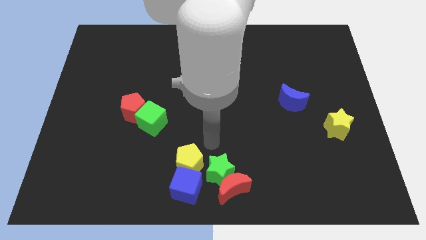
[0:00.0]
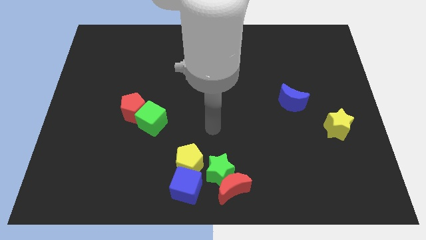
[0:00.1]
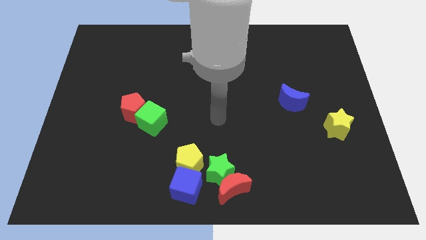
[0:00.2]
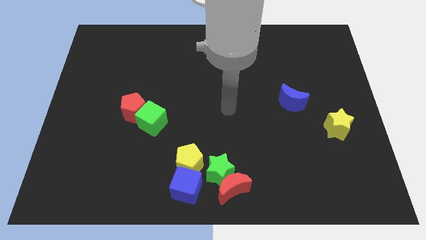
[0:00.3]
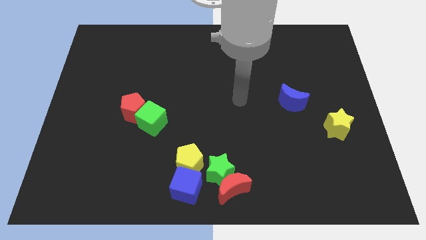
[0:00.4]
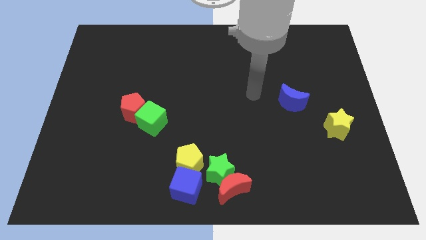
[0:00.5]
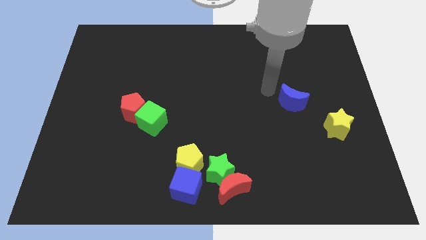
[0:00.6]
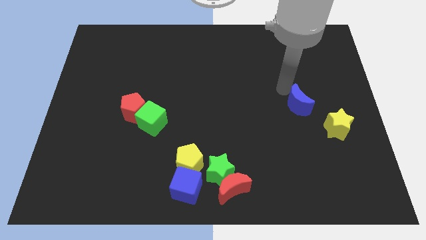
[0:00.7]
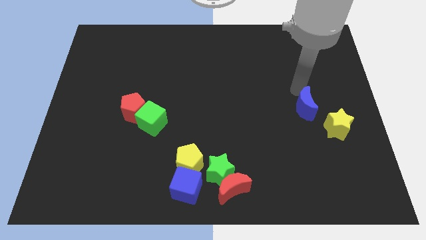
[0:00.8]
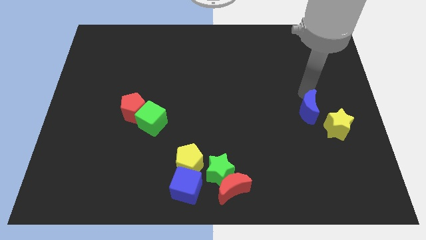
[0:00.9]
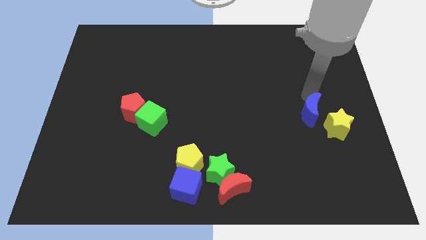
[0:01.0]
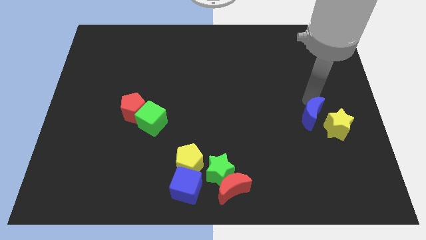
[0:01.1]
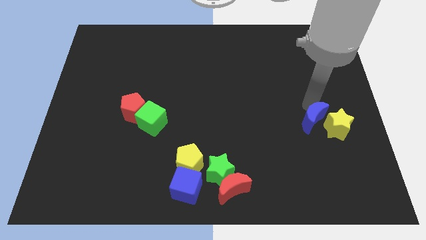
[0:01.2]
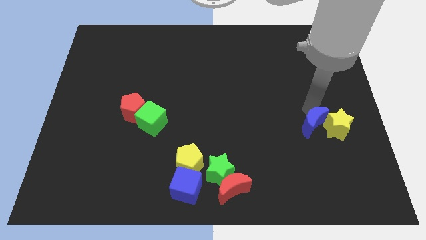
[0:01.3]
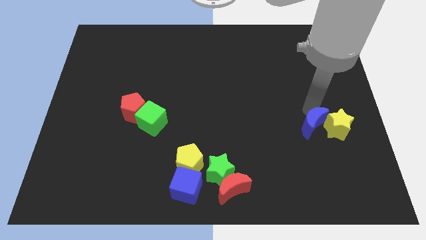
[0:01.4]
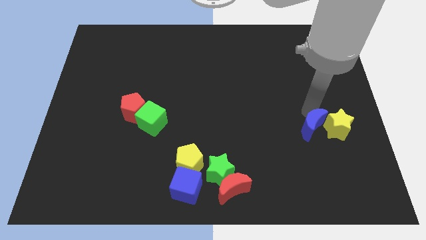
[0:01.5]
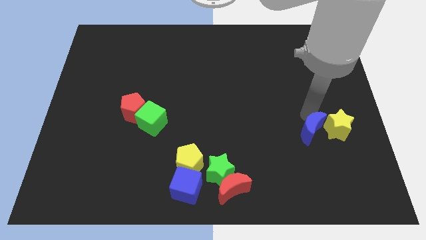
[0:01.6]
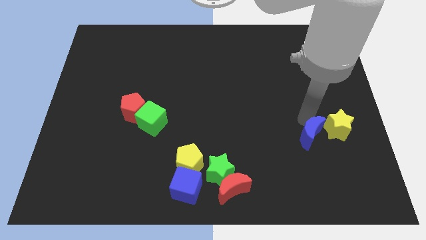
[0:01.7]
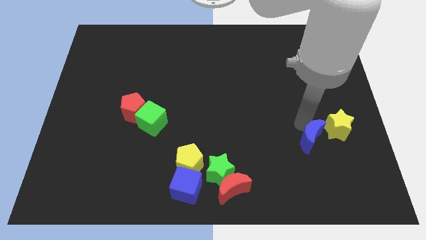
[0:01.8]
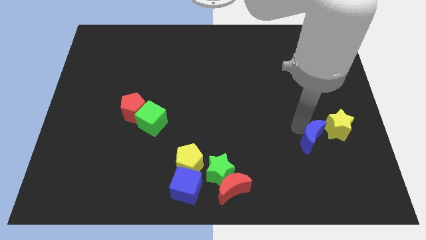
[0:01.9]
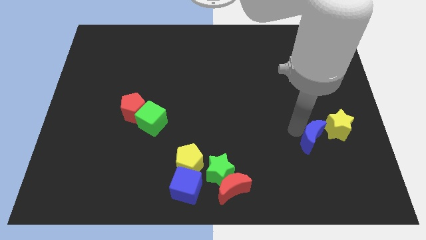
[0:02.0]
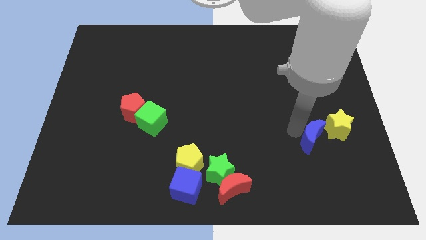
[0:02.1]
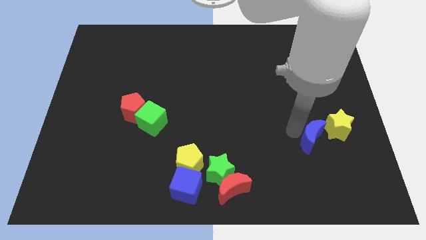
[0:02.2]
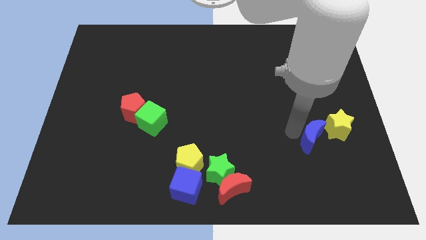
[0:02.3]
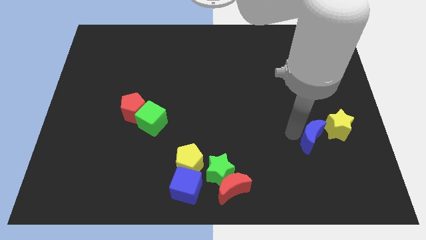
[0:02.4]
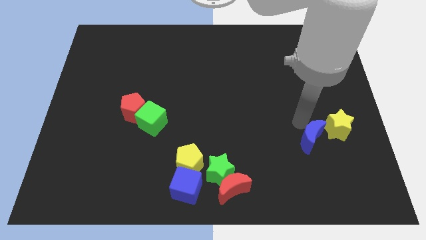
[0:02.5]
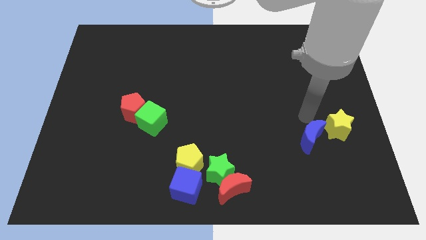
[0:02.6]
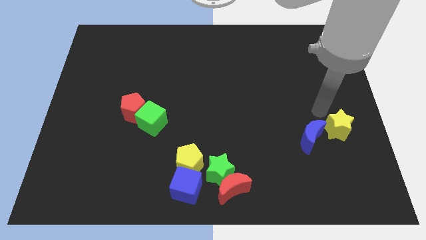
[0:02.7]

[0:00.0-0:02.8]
push the blue crescent to the bottom

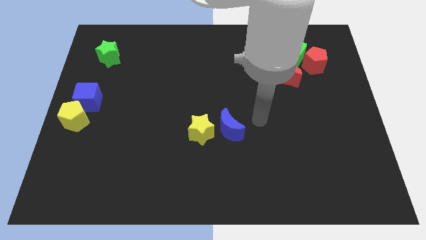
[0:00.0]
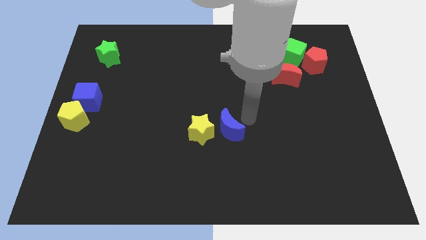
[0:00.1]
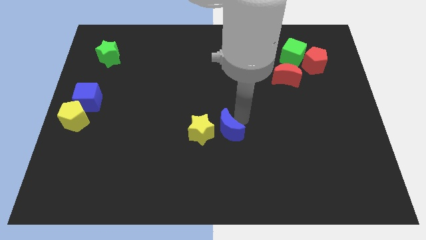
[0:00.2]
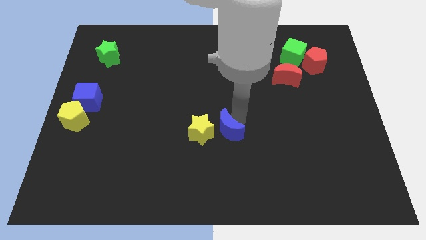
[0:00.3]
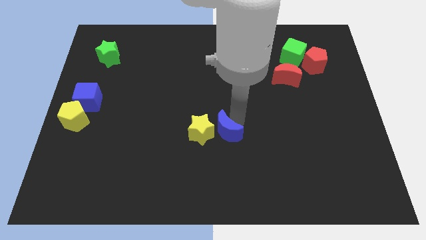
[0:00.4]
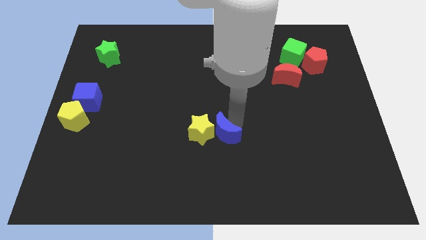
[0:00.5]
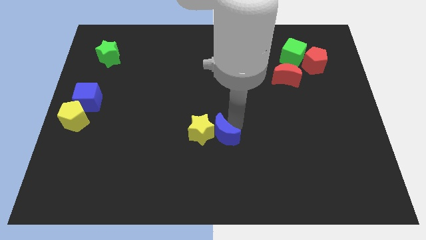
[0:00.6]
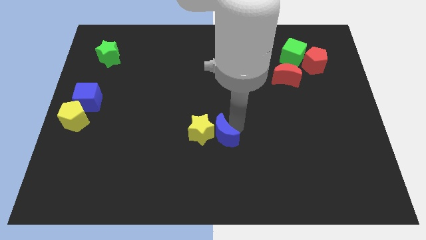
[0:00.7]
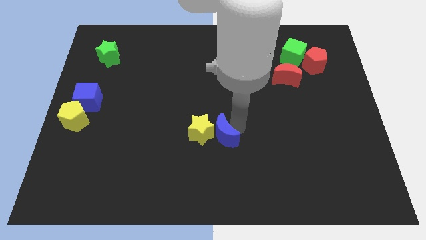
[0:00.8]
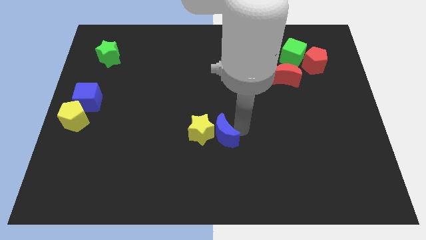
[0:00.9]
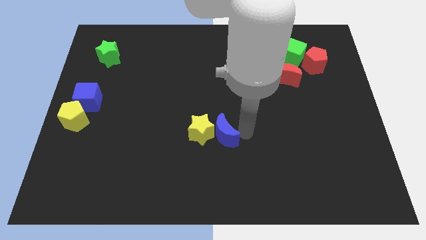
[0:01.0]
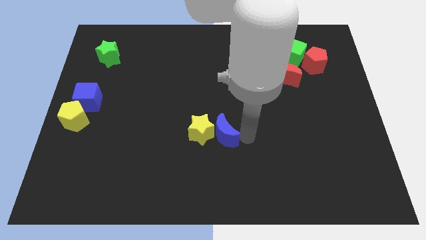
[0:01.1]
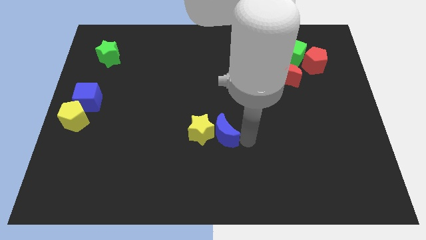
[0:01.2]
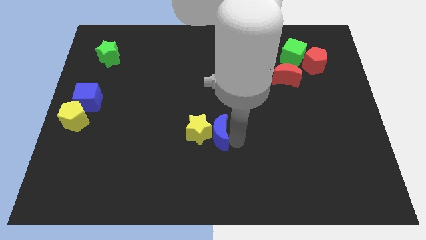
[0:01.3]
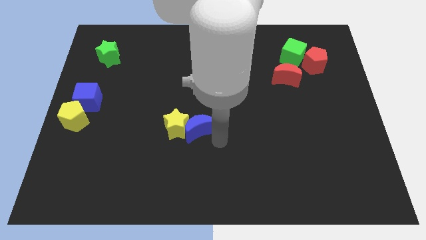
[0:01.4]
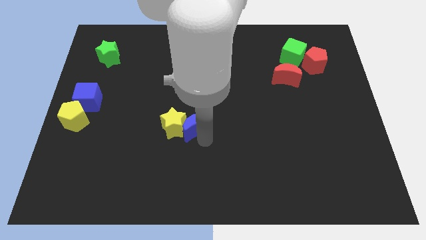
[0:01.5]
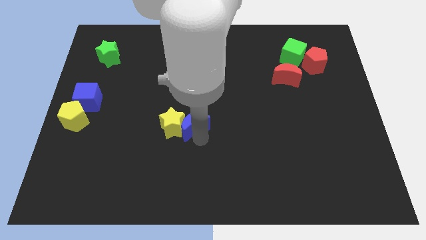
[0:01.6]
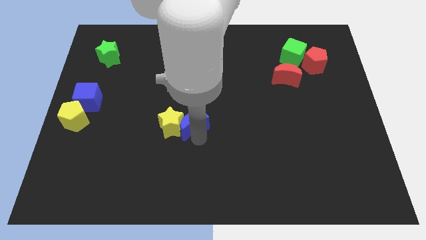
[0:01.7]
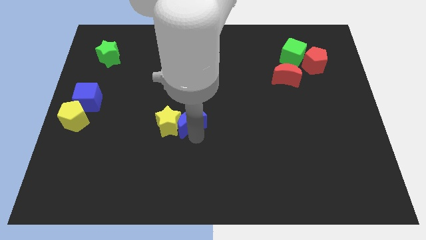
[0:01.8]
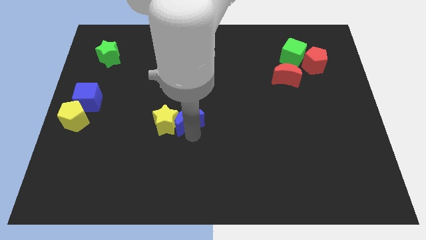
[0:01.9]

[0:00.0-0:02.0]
move the blue moon into the yellow star towards left

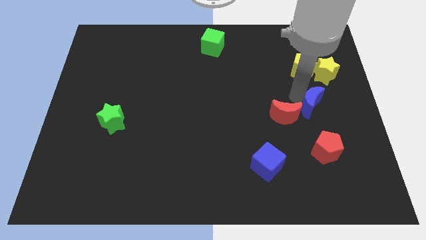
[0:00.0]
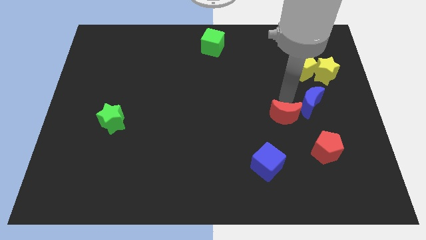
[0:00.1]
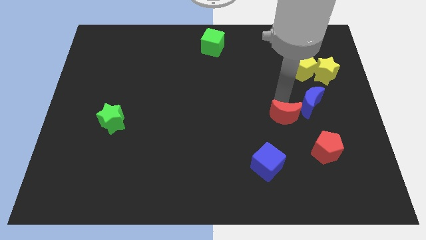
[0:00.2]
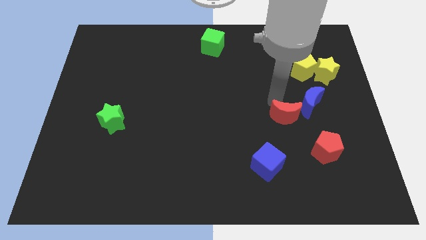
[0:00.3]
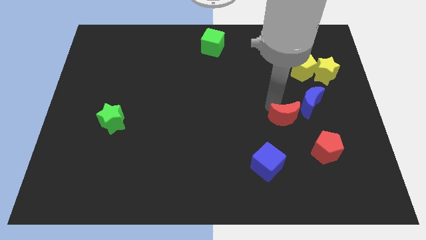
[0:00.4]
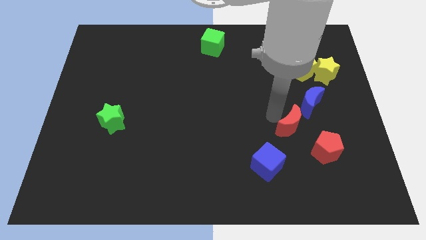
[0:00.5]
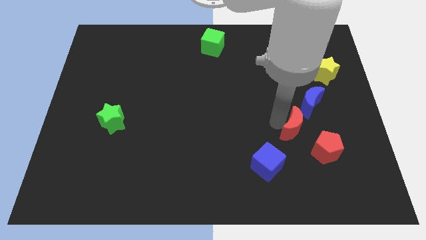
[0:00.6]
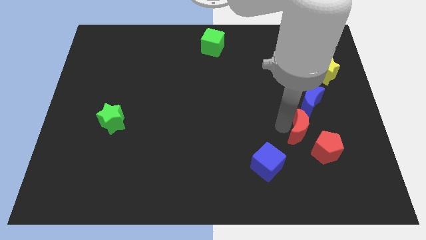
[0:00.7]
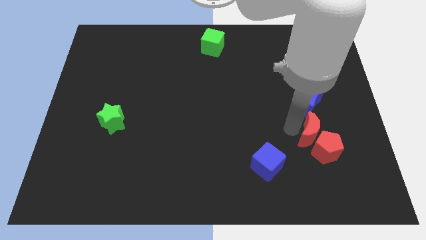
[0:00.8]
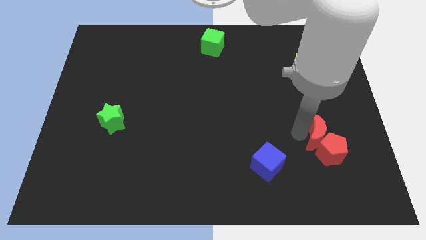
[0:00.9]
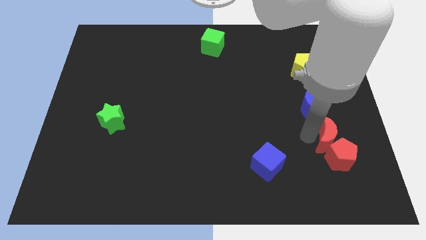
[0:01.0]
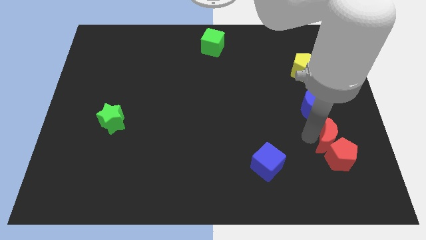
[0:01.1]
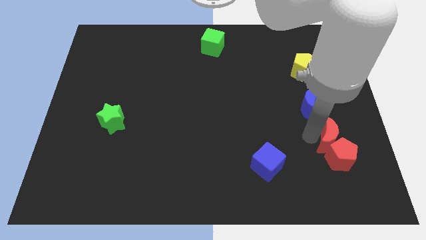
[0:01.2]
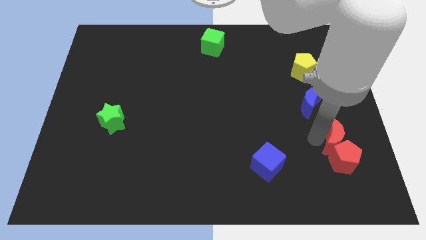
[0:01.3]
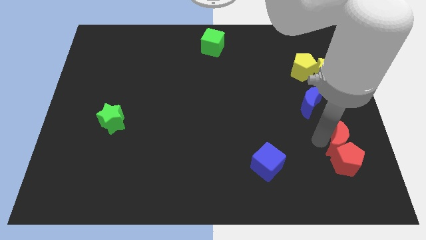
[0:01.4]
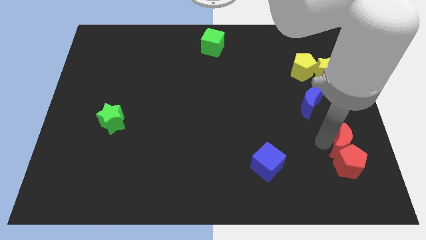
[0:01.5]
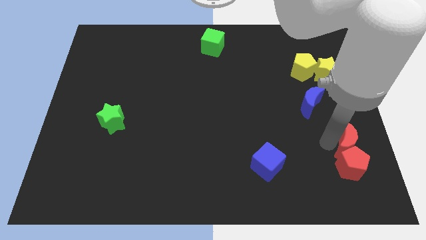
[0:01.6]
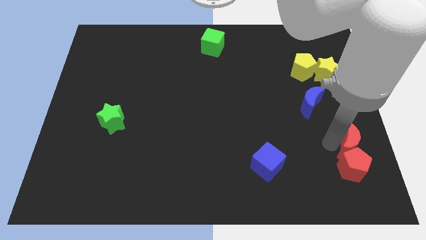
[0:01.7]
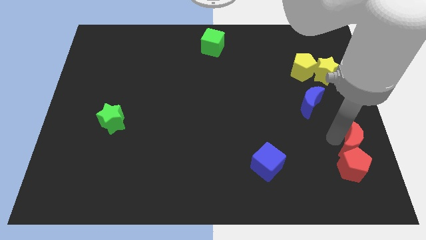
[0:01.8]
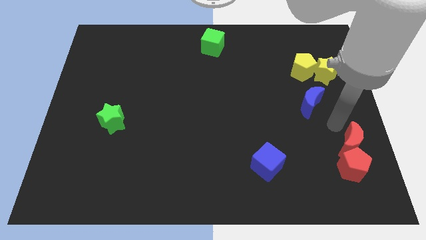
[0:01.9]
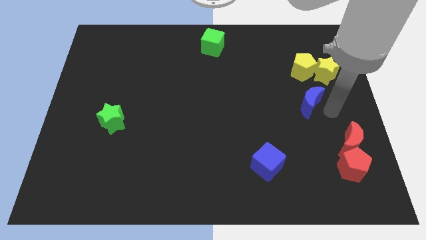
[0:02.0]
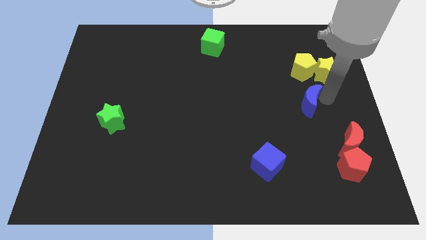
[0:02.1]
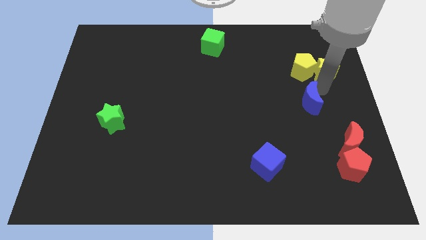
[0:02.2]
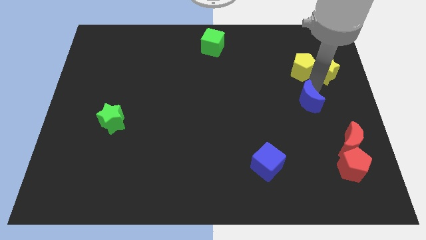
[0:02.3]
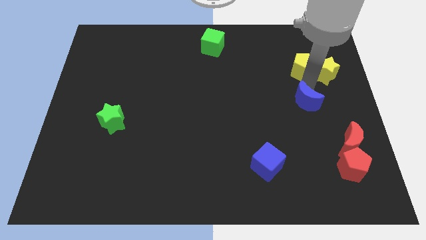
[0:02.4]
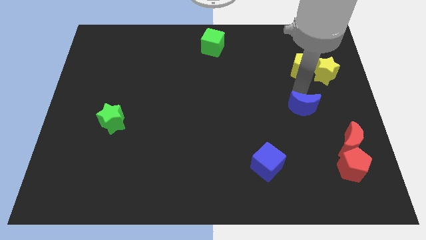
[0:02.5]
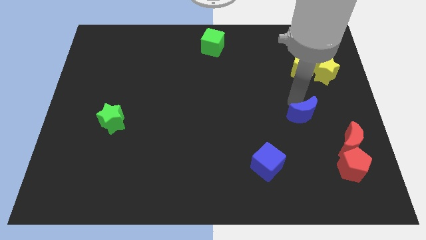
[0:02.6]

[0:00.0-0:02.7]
separate the crescents

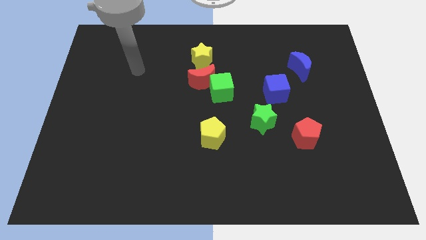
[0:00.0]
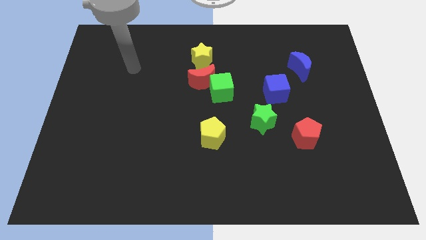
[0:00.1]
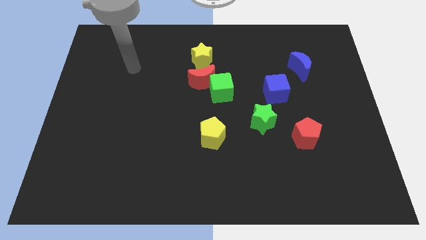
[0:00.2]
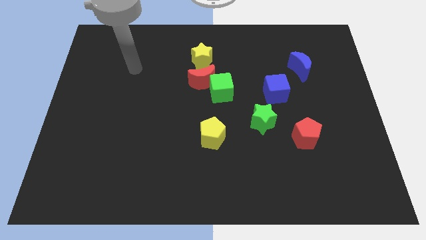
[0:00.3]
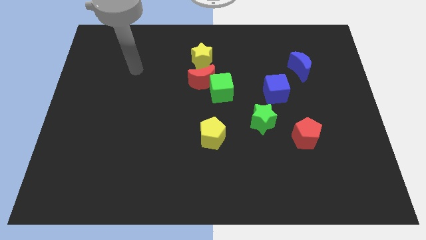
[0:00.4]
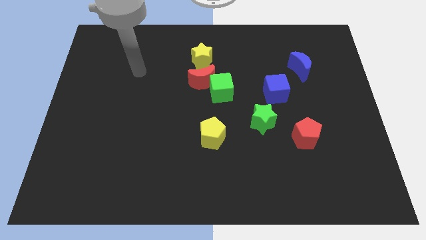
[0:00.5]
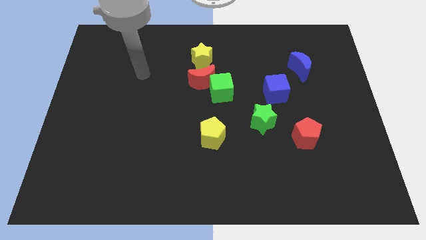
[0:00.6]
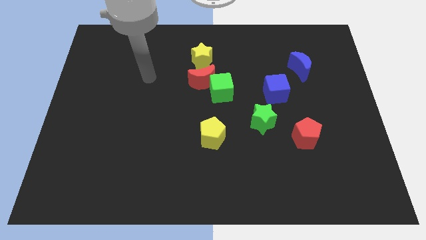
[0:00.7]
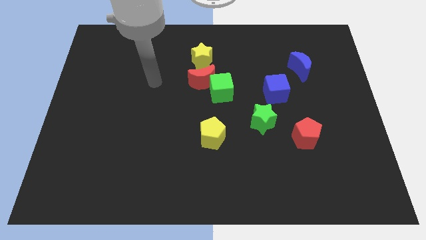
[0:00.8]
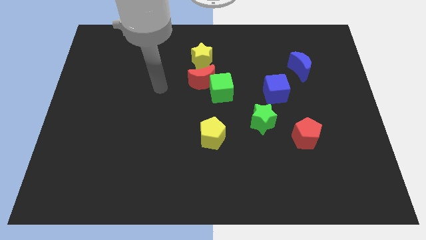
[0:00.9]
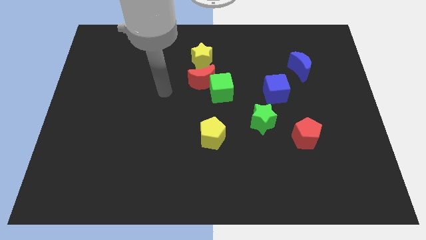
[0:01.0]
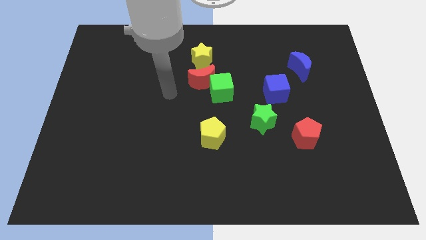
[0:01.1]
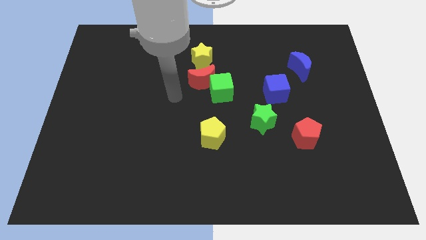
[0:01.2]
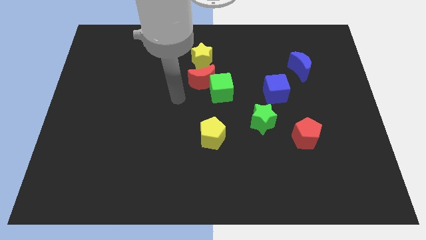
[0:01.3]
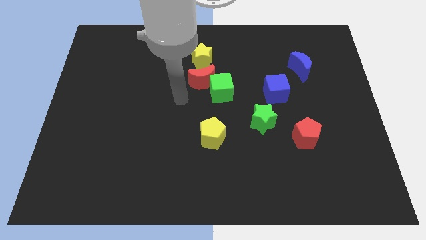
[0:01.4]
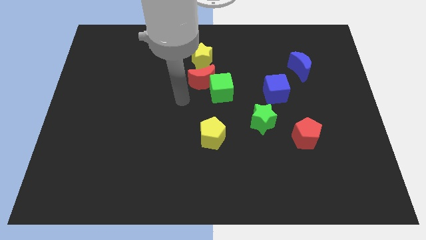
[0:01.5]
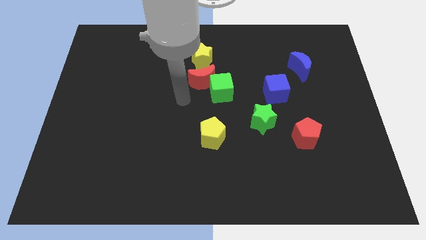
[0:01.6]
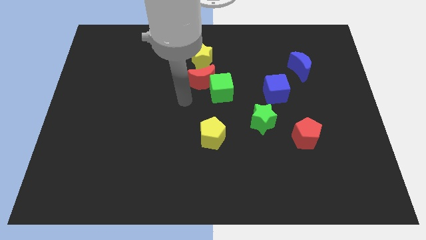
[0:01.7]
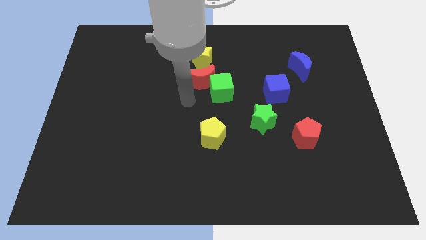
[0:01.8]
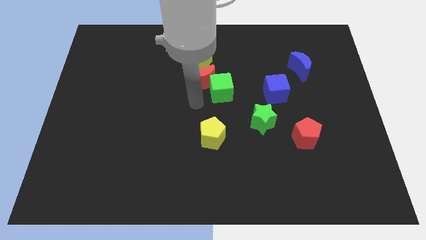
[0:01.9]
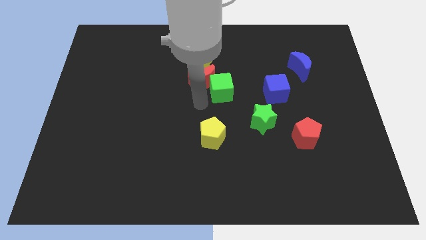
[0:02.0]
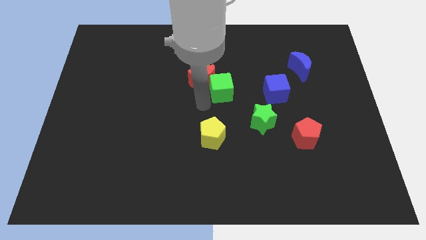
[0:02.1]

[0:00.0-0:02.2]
move your arm to the bottom left side of the green cube
